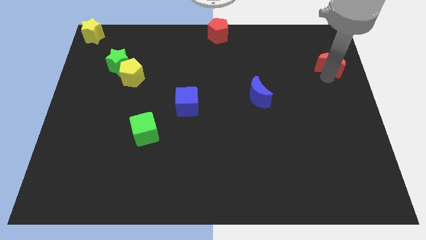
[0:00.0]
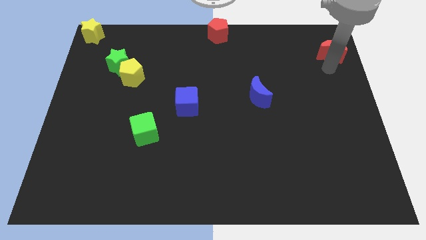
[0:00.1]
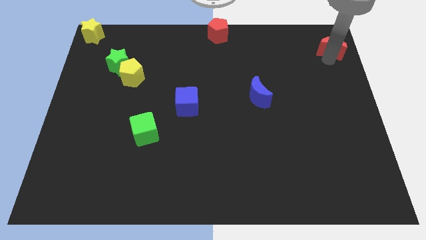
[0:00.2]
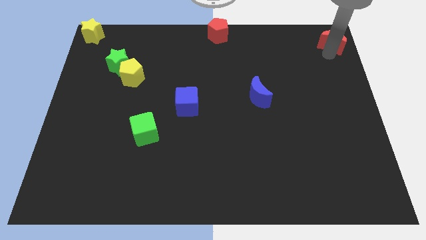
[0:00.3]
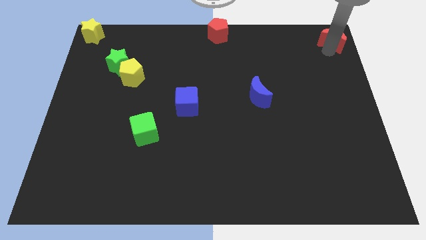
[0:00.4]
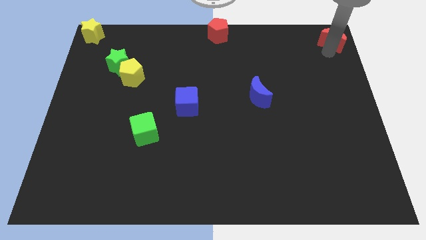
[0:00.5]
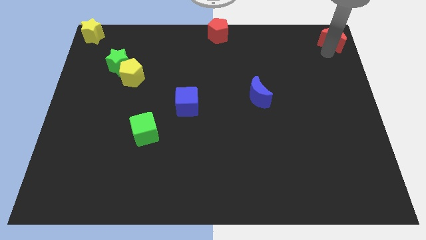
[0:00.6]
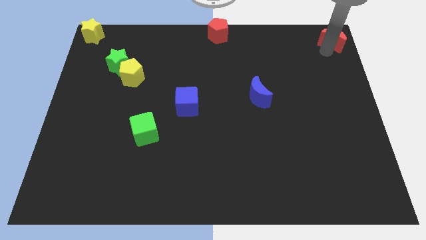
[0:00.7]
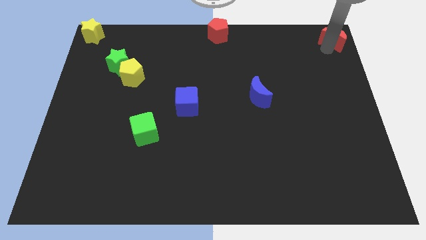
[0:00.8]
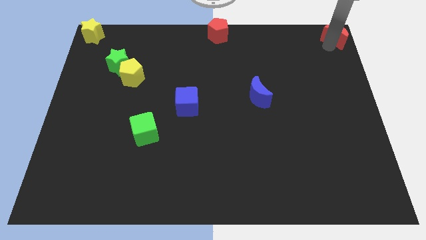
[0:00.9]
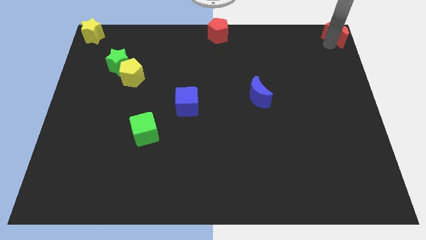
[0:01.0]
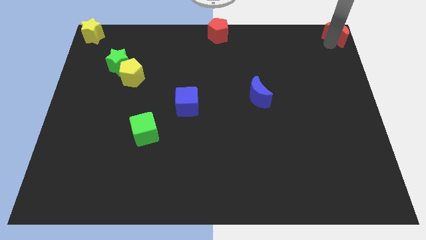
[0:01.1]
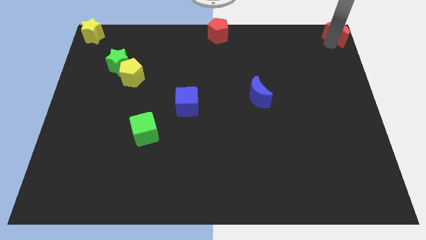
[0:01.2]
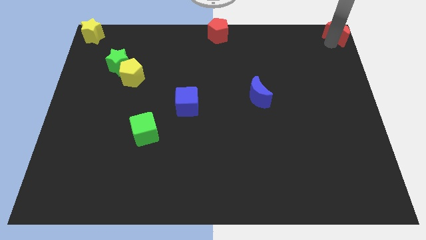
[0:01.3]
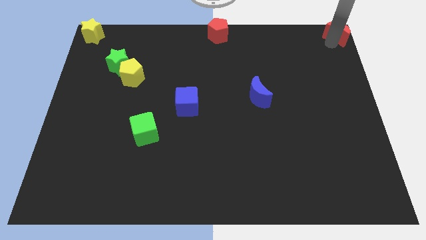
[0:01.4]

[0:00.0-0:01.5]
push the red crescent towards the top right corner of the board

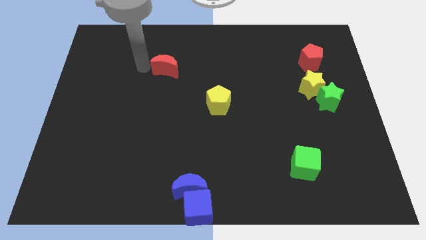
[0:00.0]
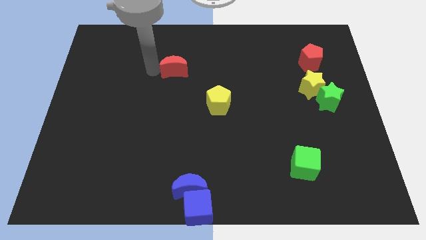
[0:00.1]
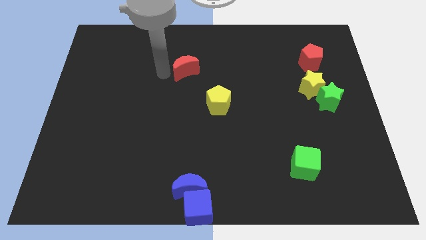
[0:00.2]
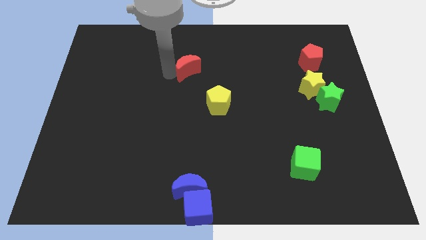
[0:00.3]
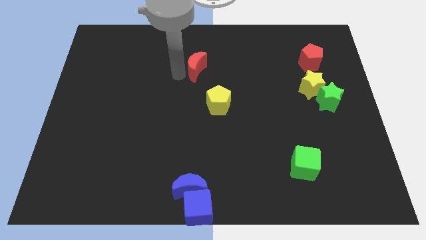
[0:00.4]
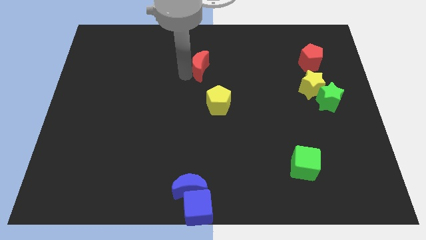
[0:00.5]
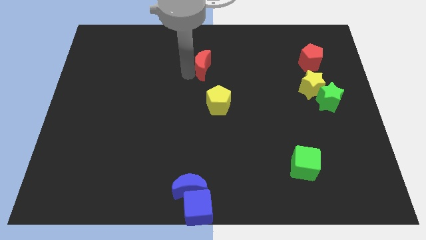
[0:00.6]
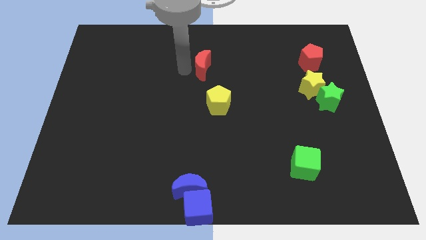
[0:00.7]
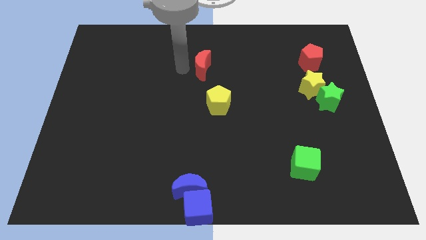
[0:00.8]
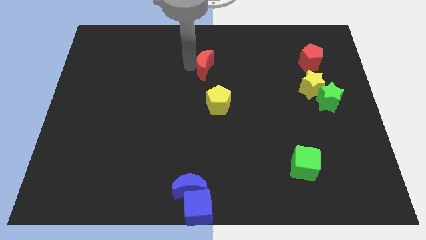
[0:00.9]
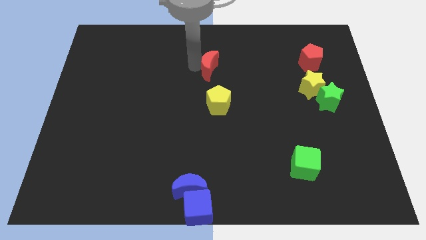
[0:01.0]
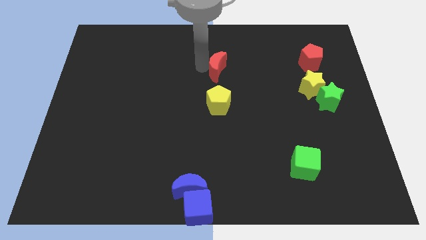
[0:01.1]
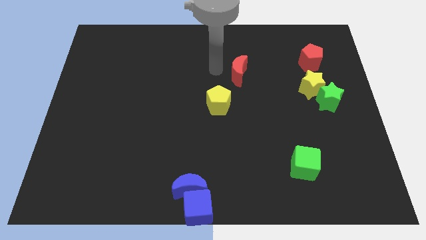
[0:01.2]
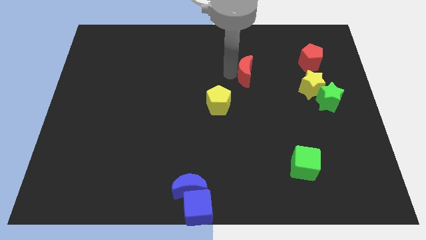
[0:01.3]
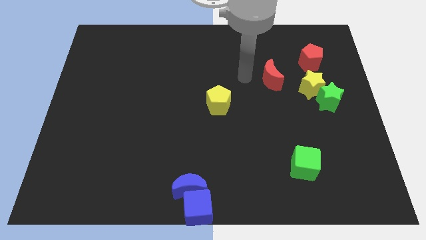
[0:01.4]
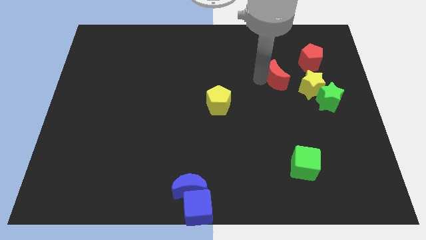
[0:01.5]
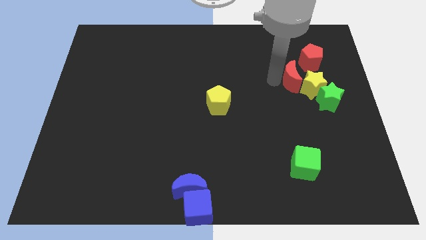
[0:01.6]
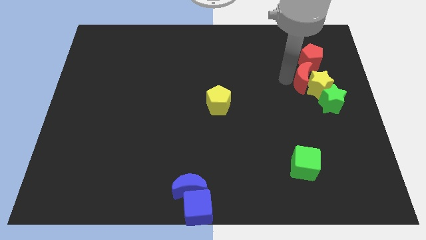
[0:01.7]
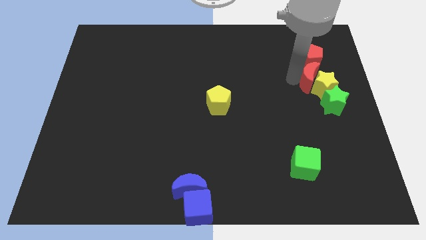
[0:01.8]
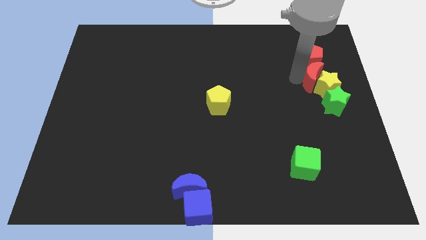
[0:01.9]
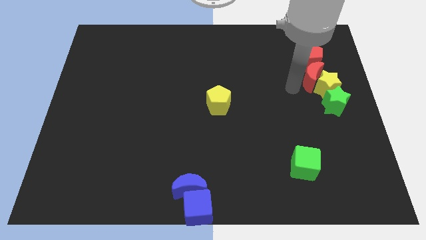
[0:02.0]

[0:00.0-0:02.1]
push the red crescent into the yellow star

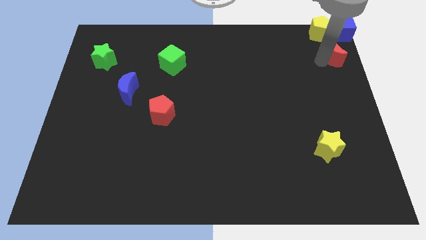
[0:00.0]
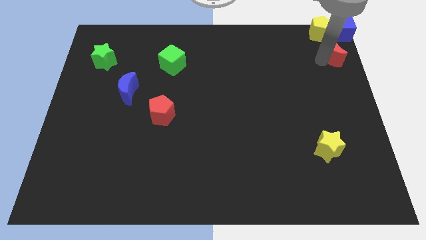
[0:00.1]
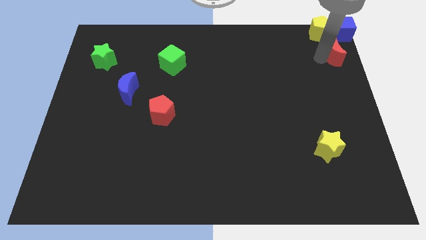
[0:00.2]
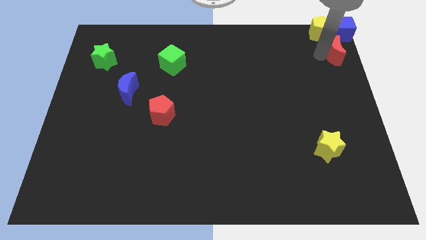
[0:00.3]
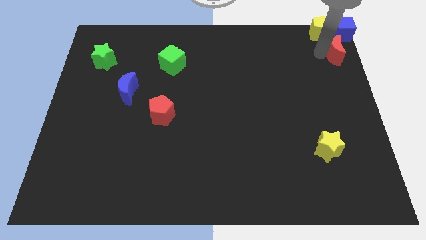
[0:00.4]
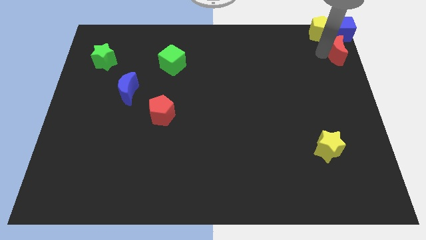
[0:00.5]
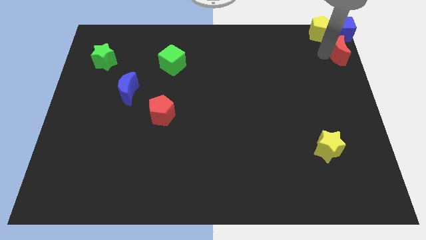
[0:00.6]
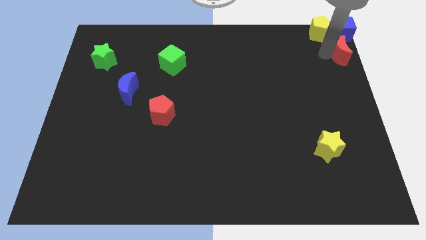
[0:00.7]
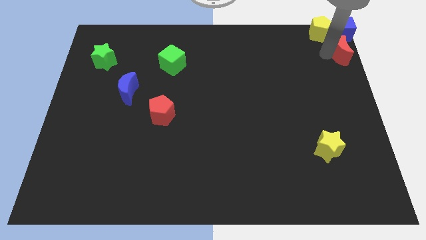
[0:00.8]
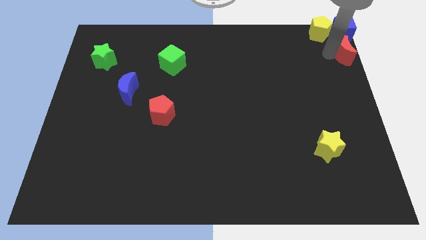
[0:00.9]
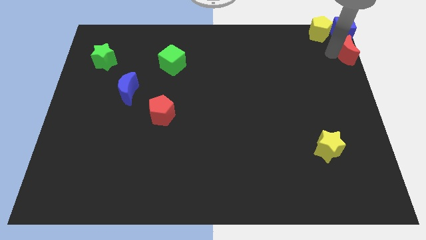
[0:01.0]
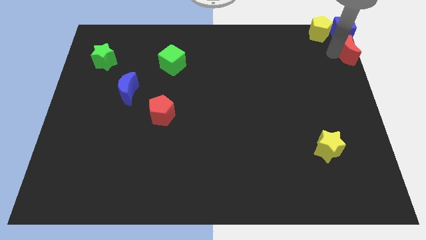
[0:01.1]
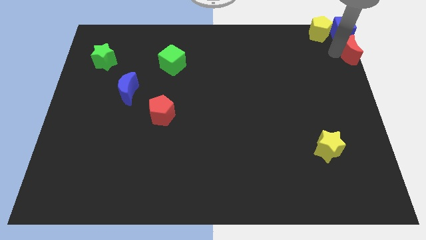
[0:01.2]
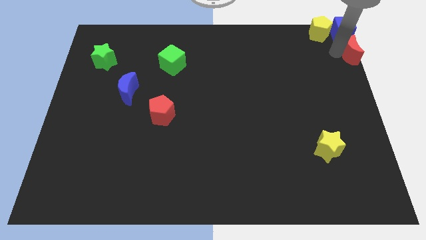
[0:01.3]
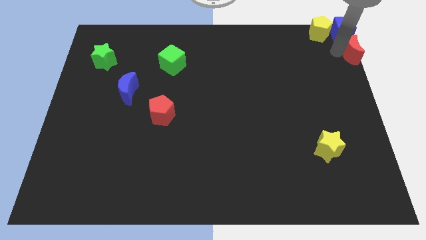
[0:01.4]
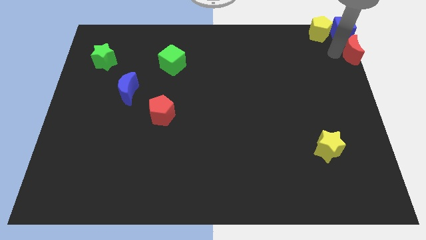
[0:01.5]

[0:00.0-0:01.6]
push the red crescent below the blue cube

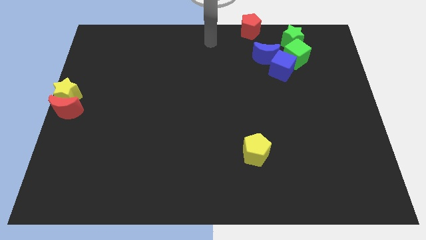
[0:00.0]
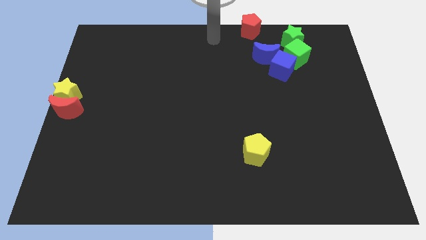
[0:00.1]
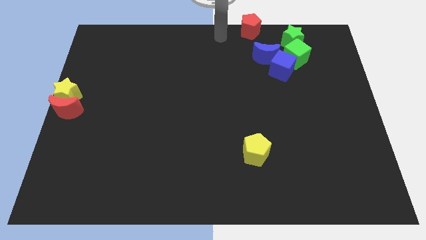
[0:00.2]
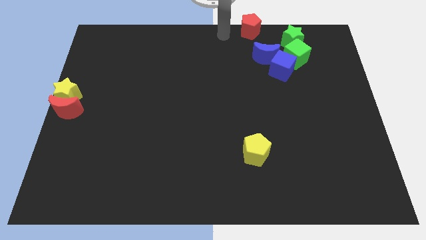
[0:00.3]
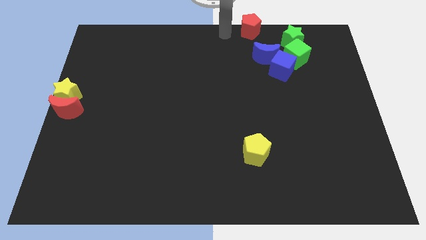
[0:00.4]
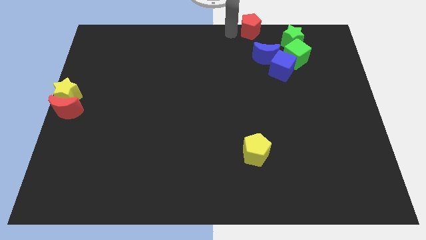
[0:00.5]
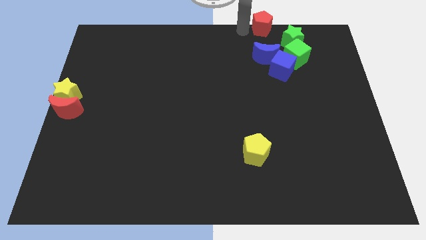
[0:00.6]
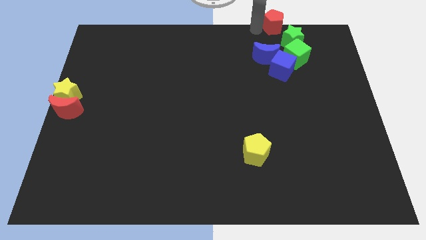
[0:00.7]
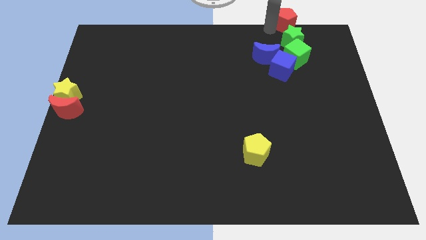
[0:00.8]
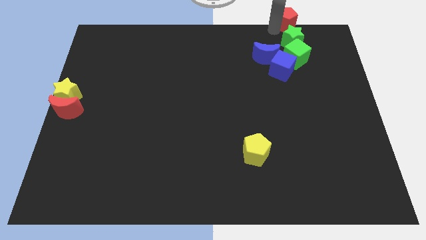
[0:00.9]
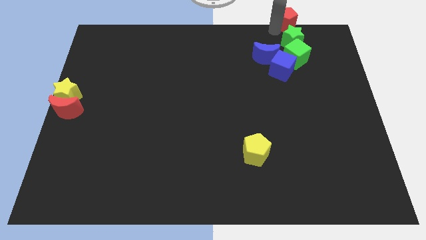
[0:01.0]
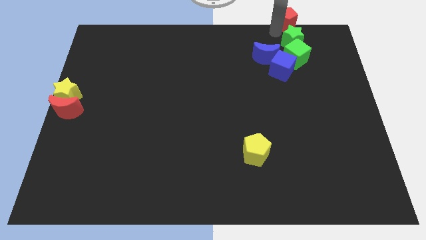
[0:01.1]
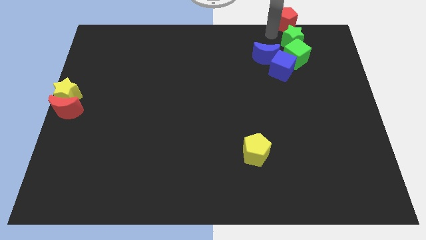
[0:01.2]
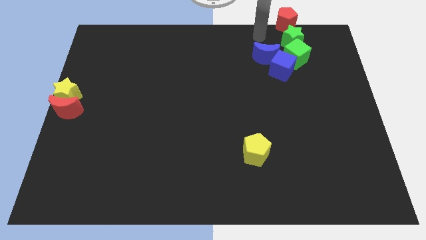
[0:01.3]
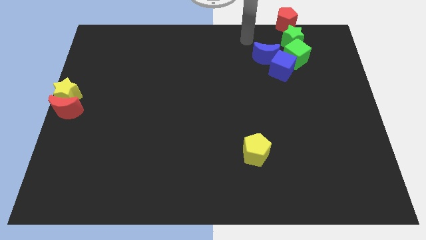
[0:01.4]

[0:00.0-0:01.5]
place the red pentagon above the green star

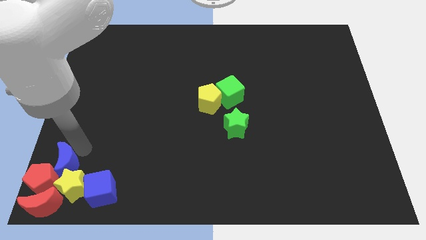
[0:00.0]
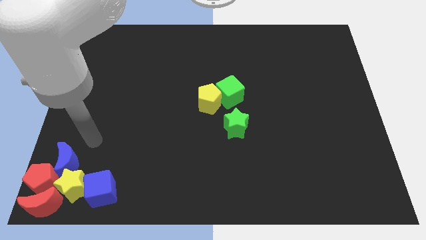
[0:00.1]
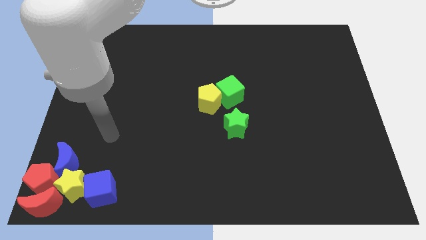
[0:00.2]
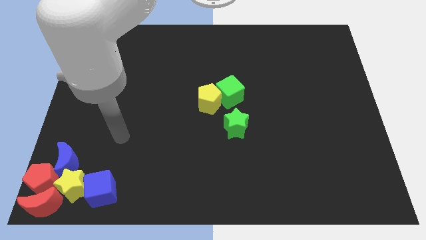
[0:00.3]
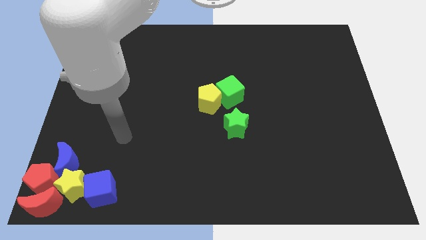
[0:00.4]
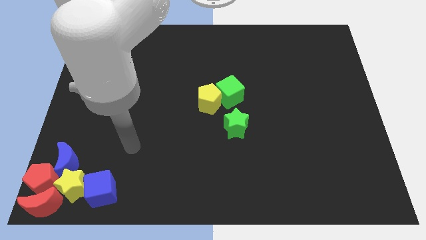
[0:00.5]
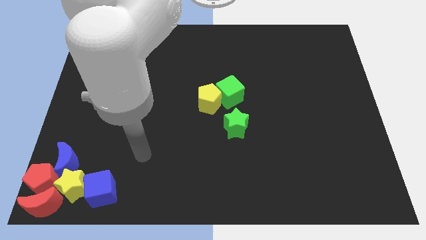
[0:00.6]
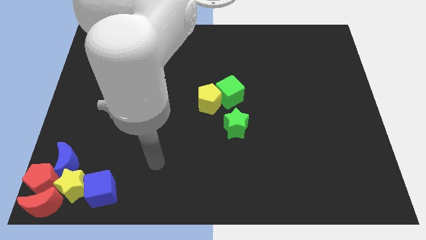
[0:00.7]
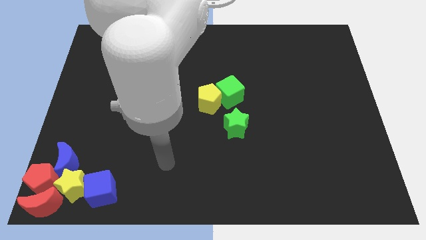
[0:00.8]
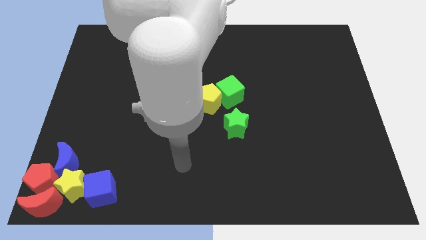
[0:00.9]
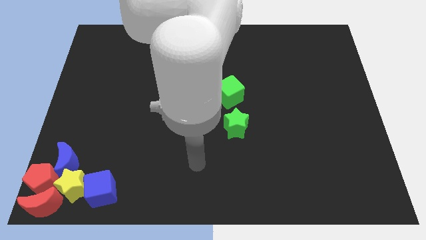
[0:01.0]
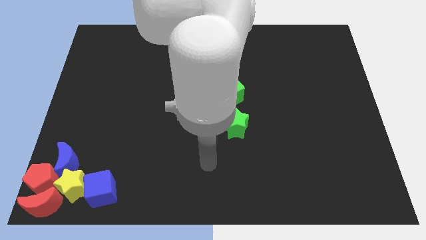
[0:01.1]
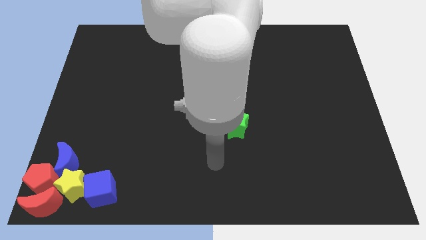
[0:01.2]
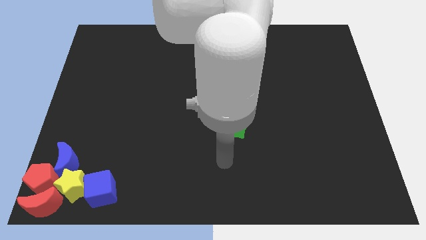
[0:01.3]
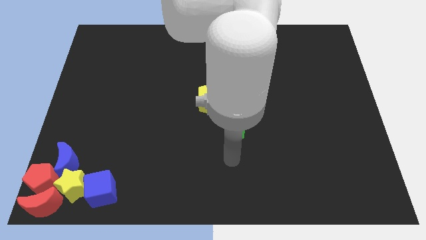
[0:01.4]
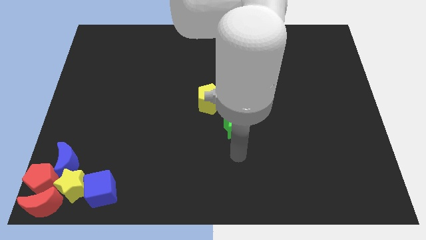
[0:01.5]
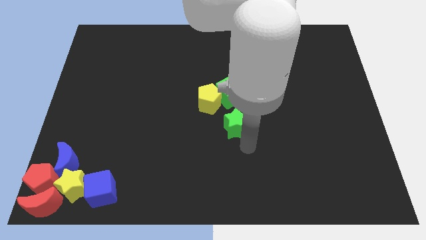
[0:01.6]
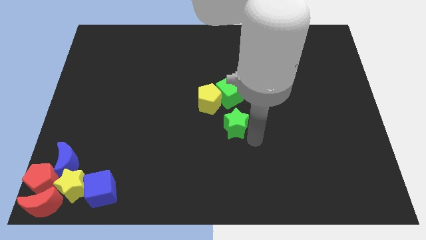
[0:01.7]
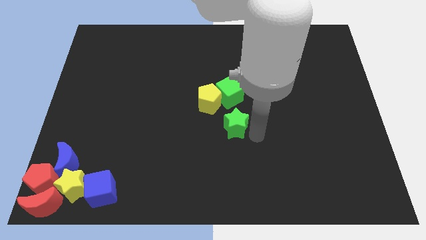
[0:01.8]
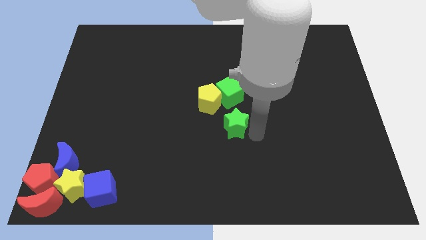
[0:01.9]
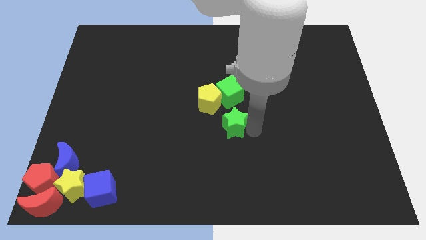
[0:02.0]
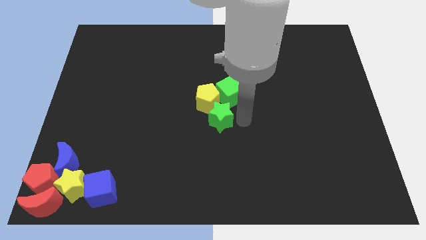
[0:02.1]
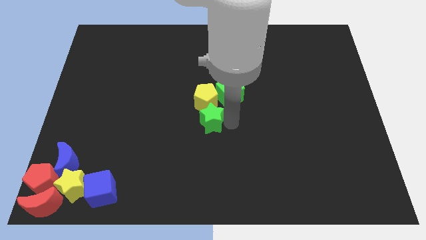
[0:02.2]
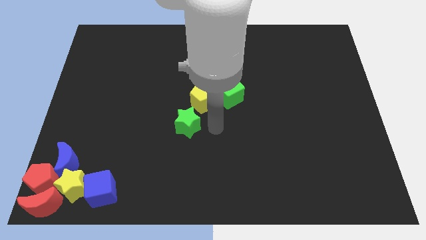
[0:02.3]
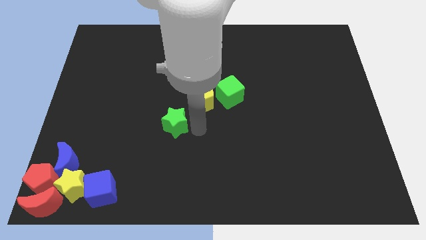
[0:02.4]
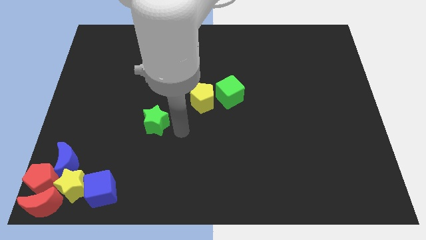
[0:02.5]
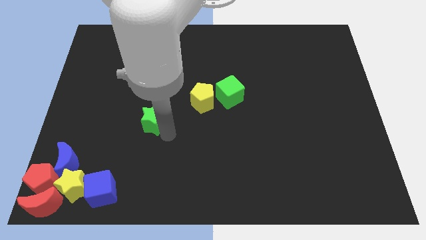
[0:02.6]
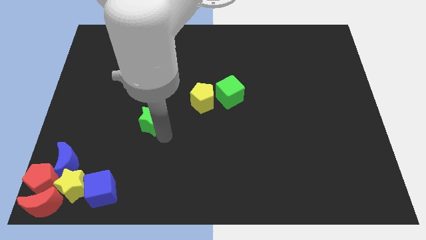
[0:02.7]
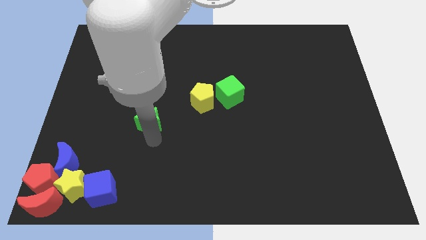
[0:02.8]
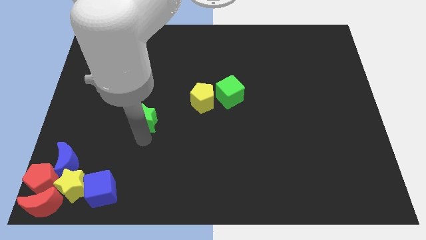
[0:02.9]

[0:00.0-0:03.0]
push the green star along with yellow pentagon
